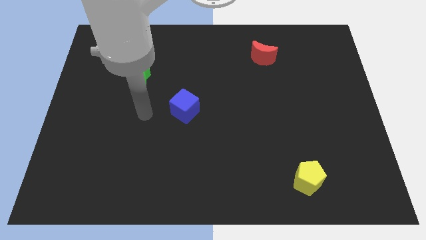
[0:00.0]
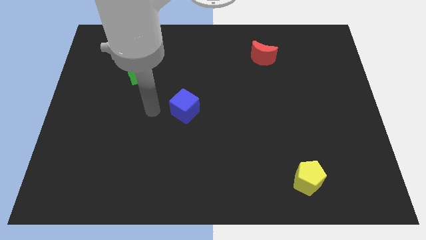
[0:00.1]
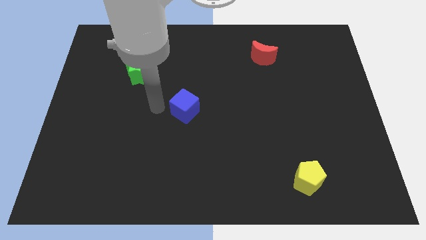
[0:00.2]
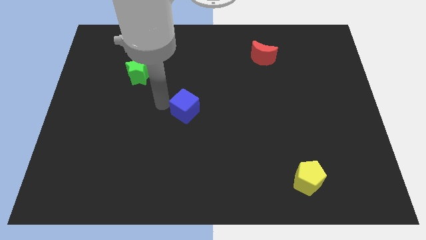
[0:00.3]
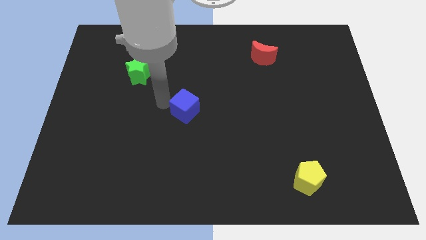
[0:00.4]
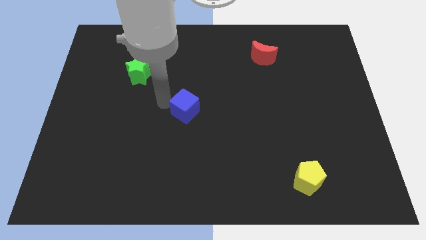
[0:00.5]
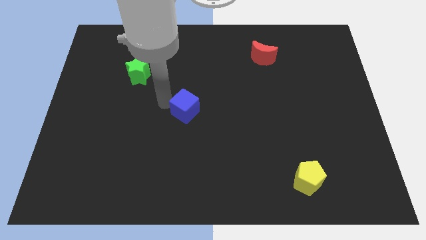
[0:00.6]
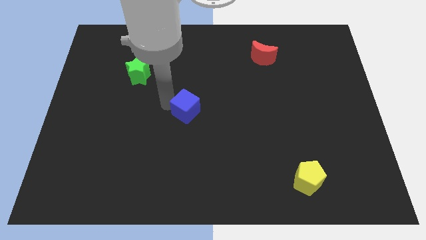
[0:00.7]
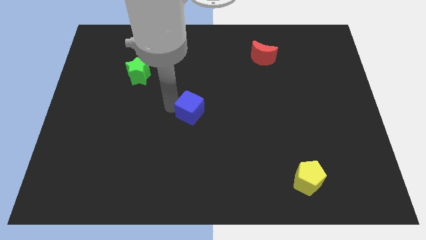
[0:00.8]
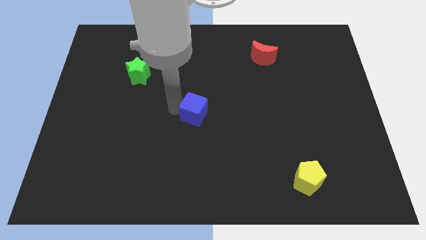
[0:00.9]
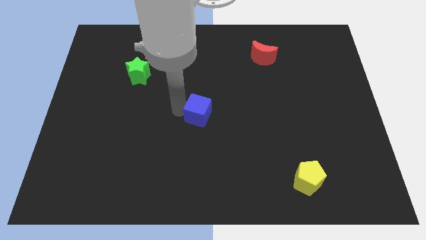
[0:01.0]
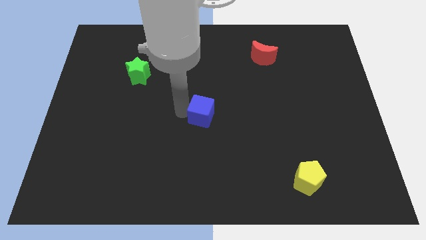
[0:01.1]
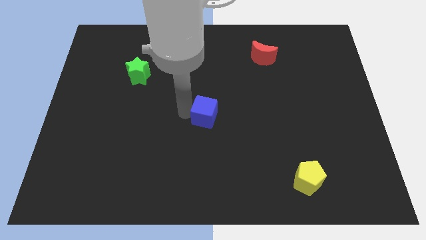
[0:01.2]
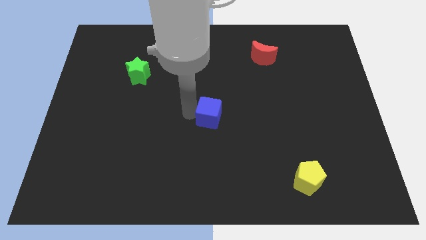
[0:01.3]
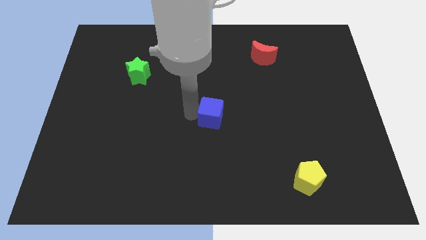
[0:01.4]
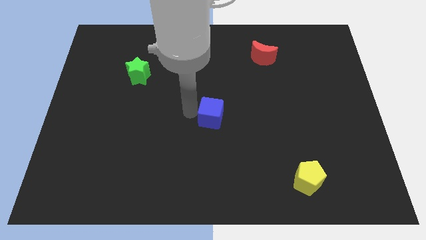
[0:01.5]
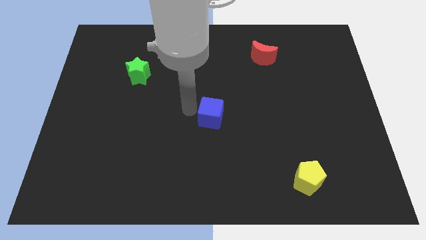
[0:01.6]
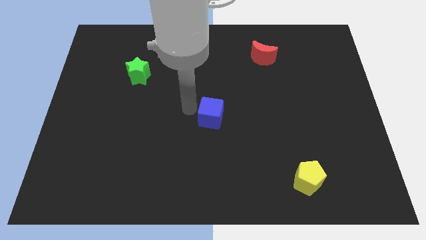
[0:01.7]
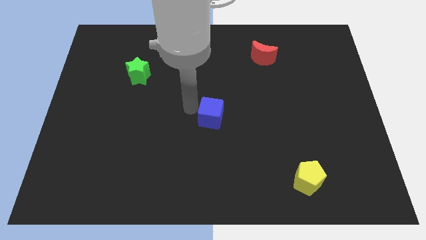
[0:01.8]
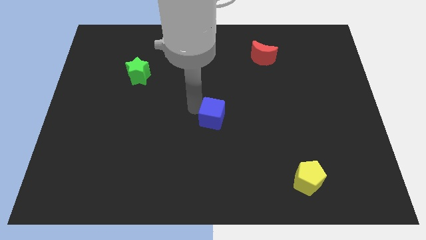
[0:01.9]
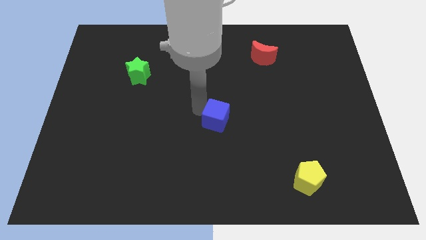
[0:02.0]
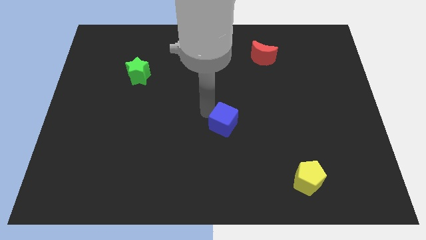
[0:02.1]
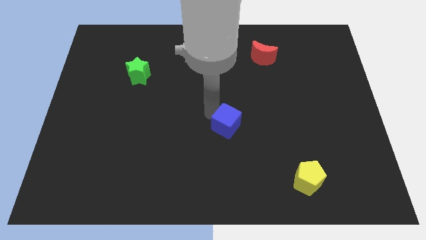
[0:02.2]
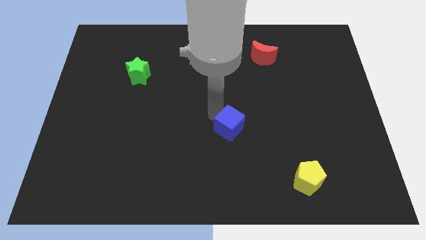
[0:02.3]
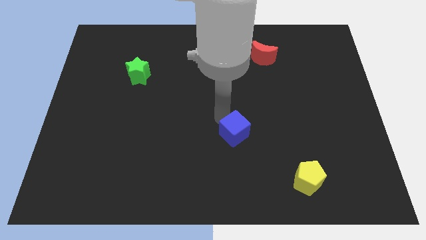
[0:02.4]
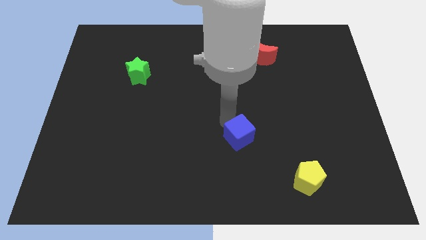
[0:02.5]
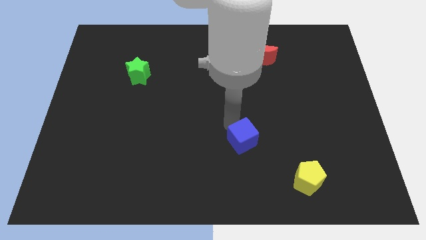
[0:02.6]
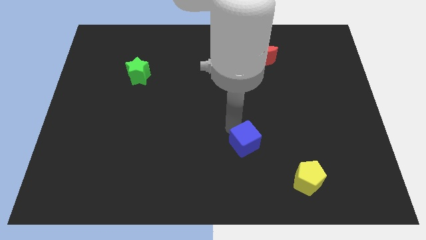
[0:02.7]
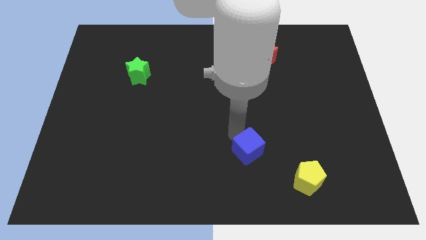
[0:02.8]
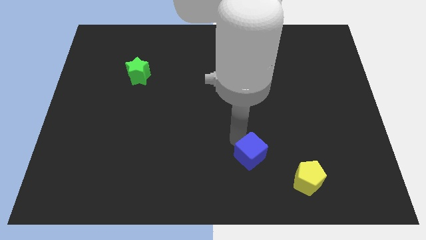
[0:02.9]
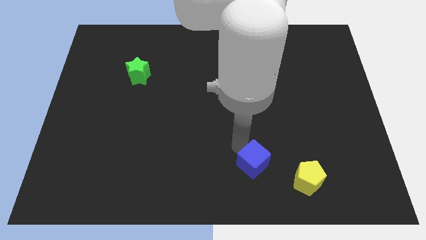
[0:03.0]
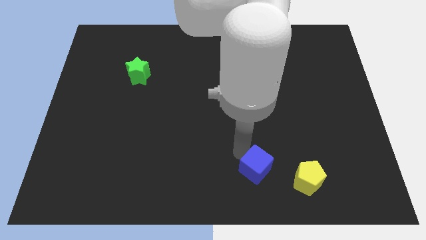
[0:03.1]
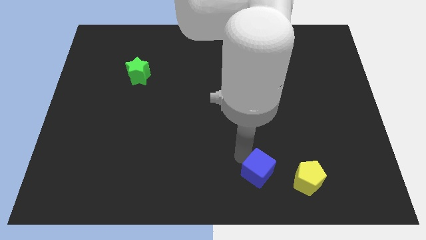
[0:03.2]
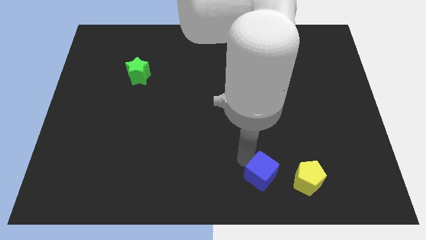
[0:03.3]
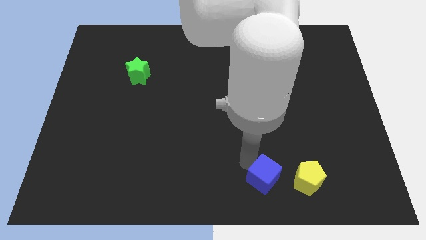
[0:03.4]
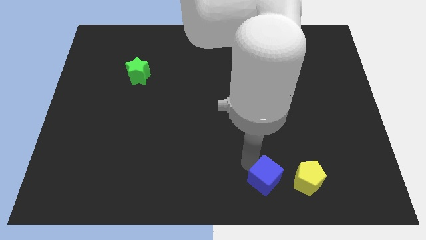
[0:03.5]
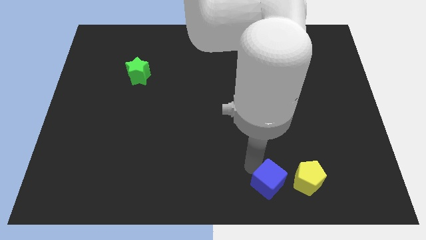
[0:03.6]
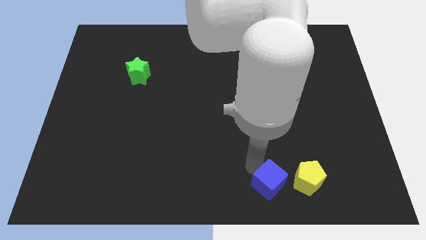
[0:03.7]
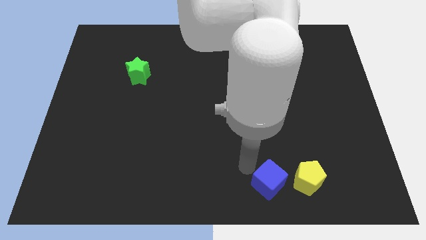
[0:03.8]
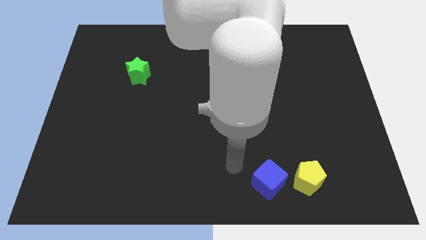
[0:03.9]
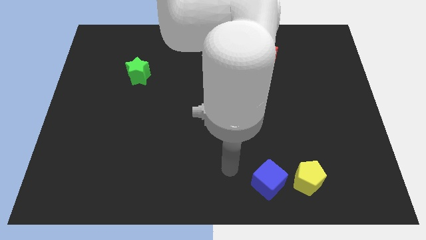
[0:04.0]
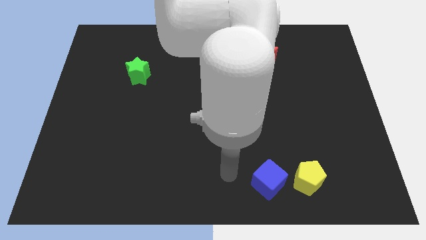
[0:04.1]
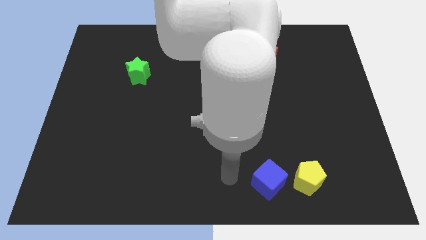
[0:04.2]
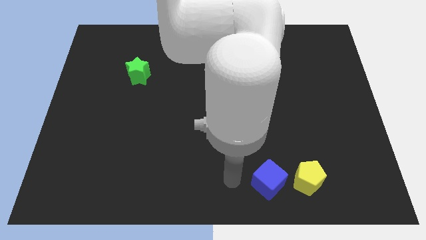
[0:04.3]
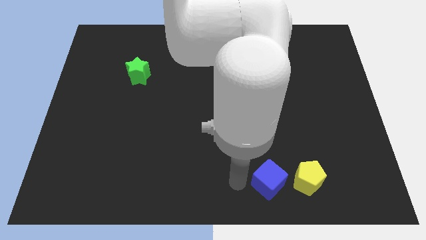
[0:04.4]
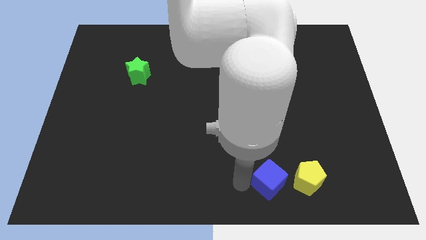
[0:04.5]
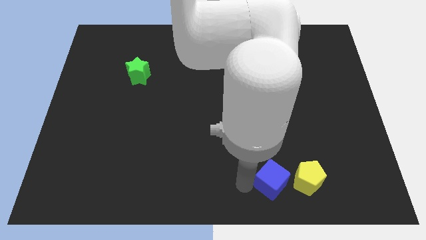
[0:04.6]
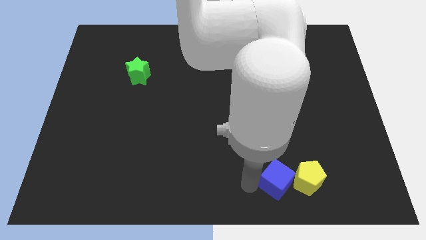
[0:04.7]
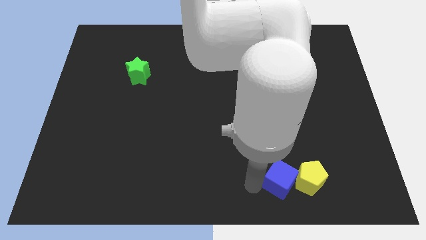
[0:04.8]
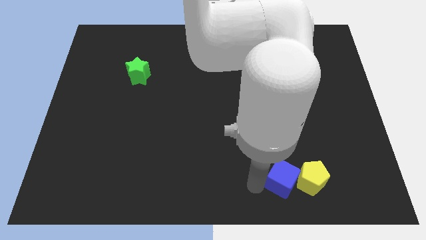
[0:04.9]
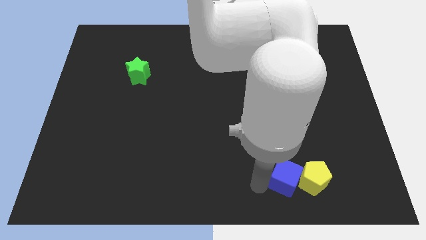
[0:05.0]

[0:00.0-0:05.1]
move the blue cube to the yellow block

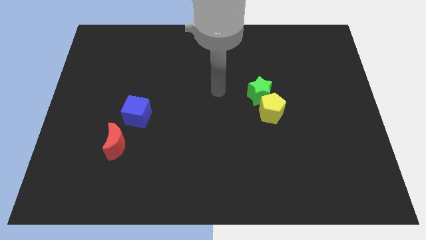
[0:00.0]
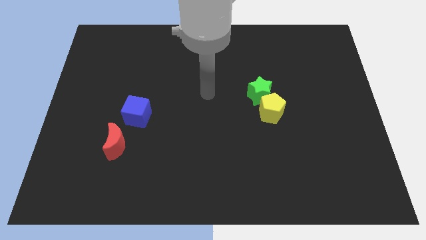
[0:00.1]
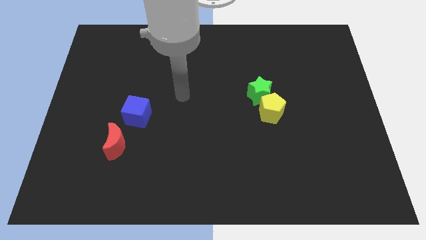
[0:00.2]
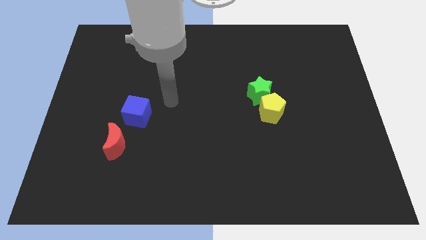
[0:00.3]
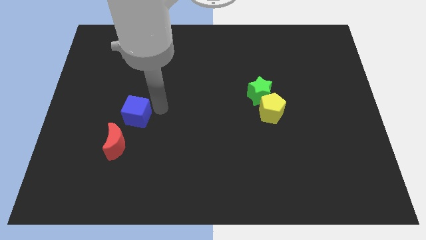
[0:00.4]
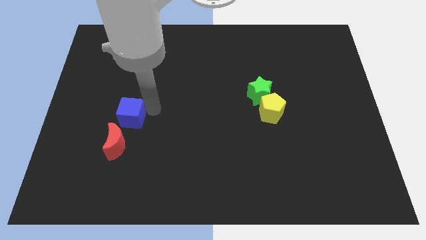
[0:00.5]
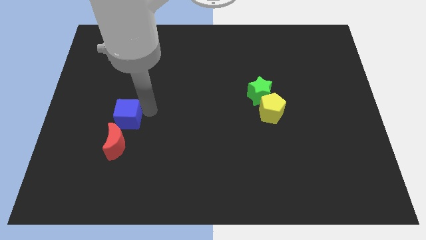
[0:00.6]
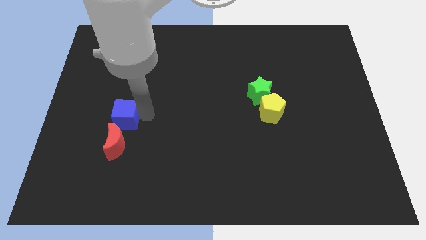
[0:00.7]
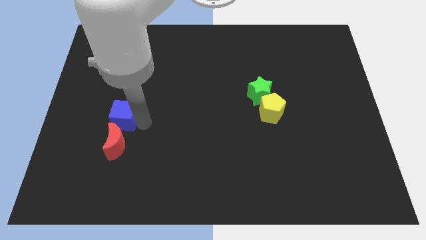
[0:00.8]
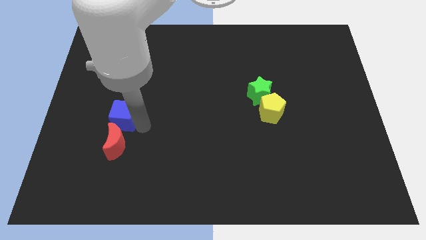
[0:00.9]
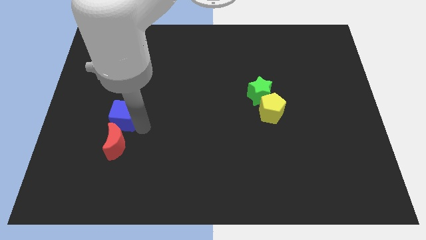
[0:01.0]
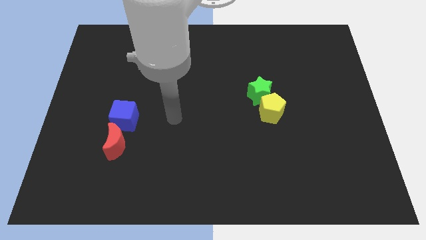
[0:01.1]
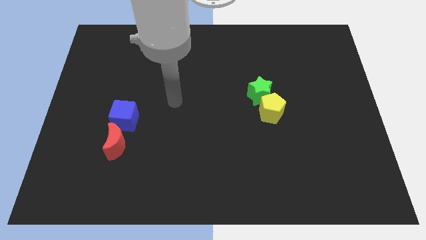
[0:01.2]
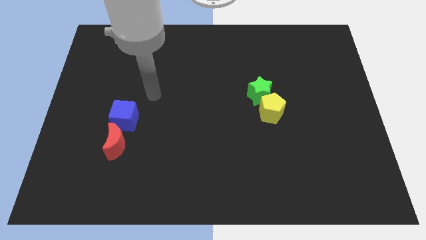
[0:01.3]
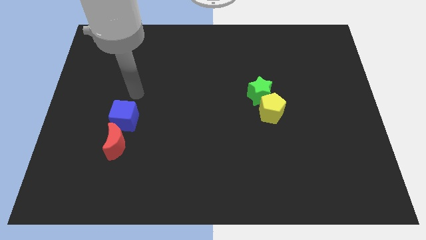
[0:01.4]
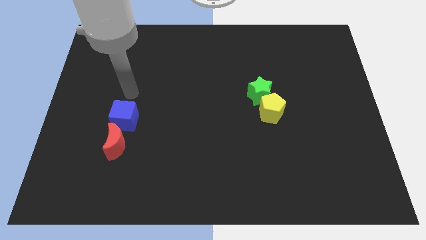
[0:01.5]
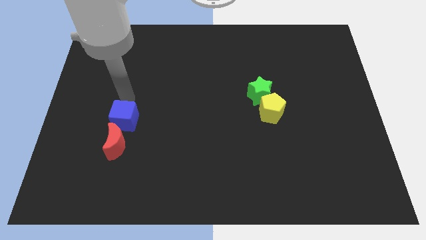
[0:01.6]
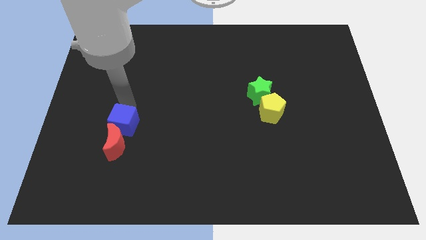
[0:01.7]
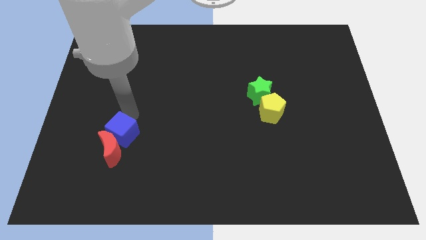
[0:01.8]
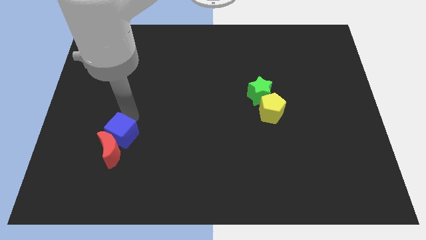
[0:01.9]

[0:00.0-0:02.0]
move the blue cube close to the moon

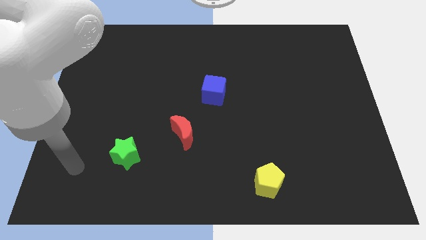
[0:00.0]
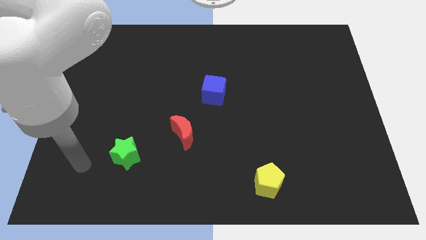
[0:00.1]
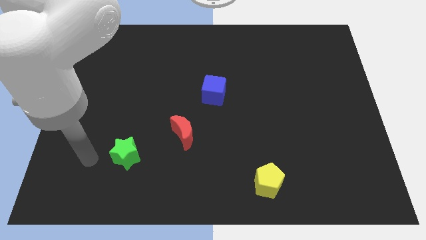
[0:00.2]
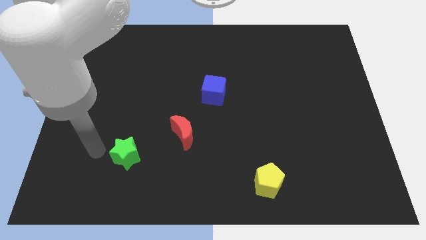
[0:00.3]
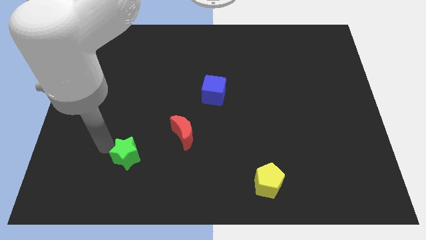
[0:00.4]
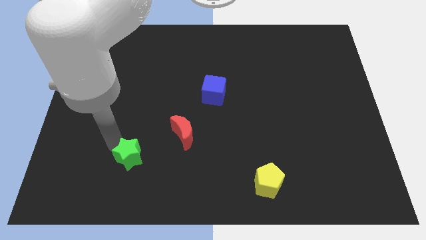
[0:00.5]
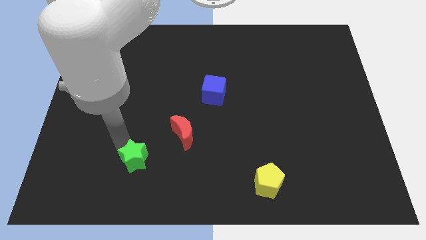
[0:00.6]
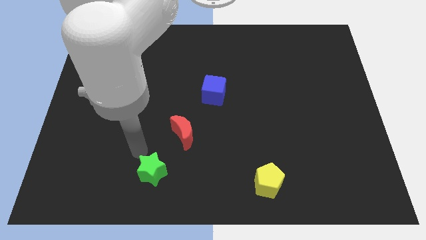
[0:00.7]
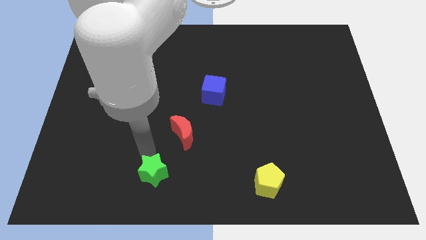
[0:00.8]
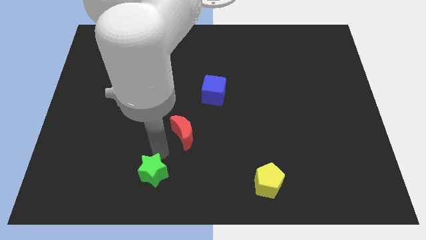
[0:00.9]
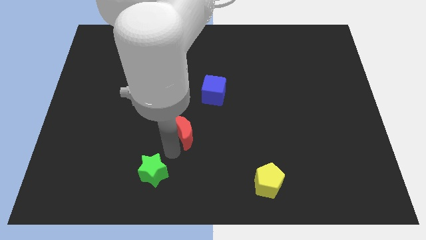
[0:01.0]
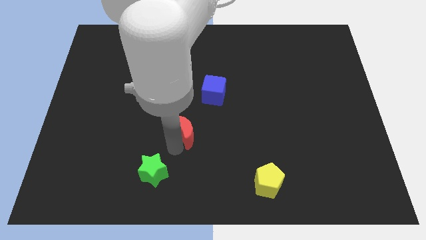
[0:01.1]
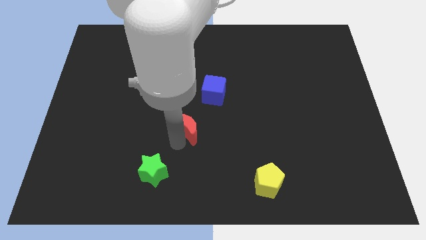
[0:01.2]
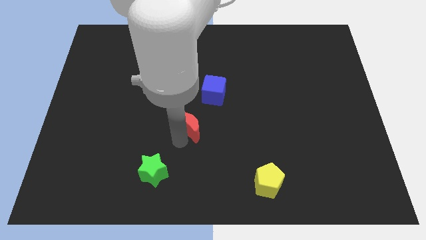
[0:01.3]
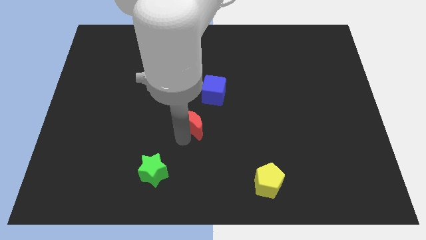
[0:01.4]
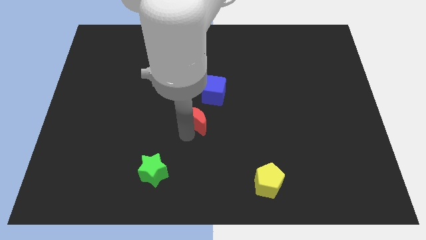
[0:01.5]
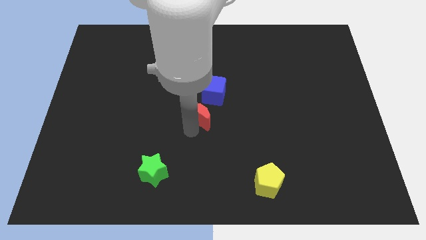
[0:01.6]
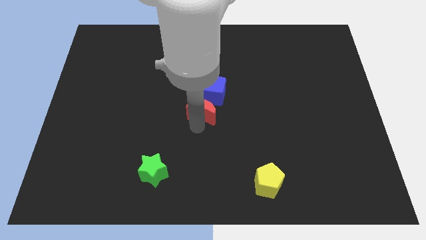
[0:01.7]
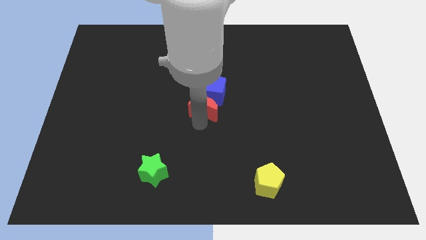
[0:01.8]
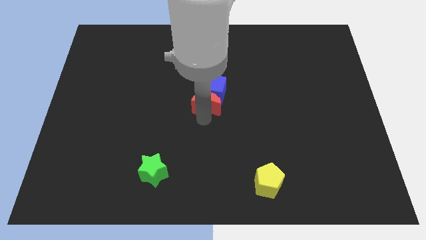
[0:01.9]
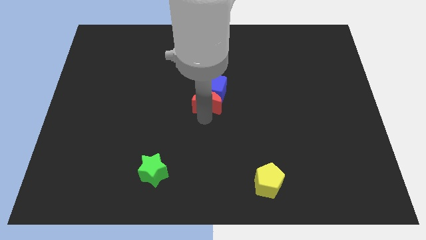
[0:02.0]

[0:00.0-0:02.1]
move the moon towards the blue block
